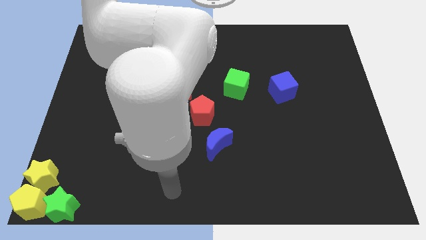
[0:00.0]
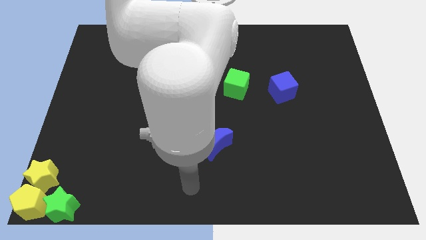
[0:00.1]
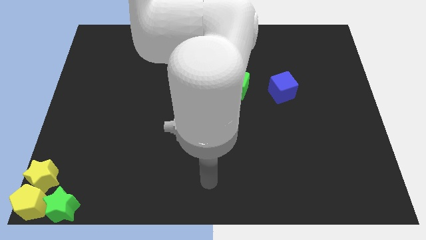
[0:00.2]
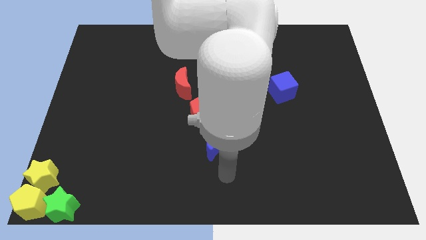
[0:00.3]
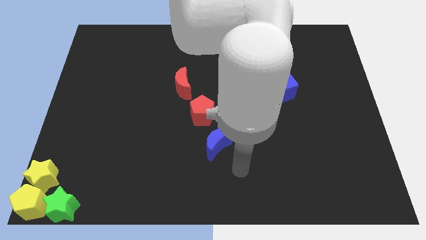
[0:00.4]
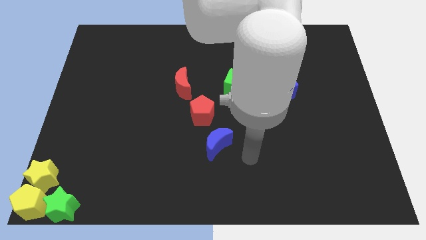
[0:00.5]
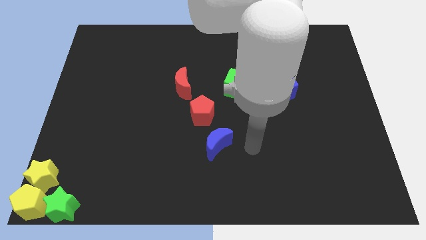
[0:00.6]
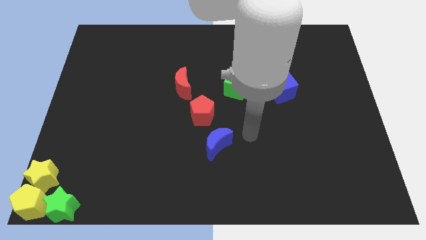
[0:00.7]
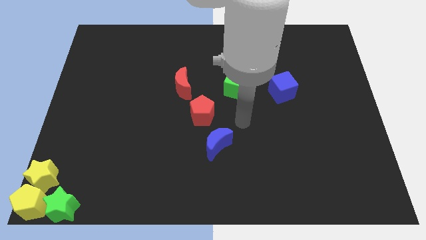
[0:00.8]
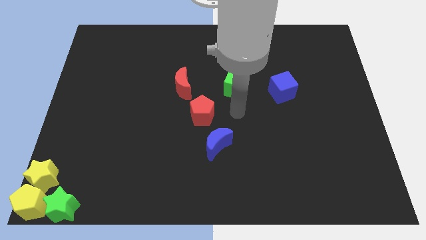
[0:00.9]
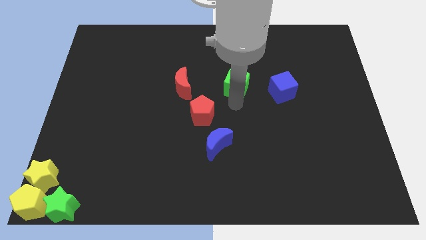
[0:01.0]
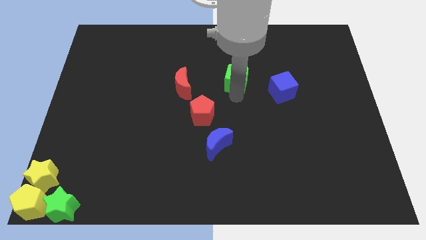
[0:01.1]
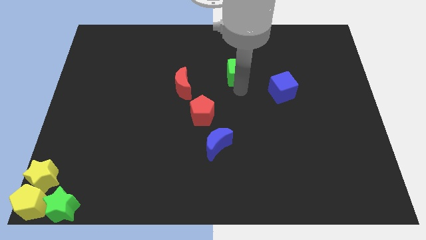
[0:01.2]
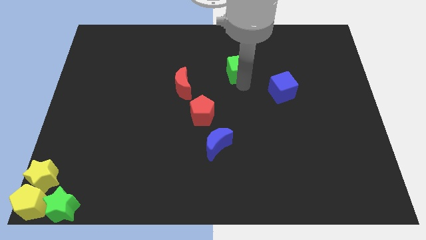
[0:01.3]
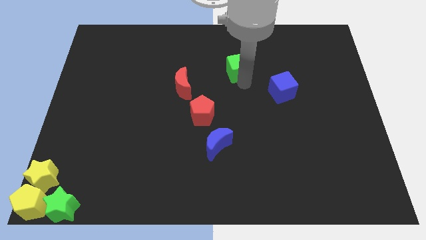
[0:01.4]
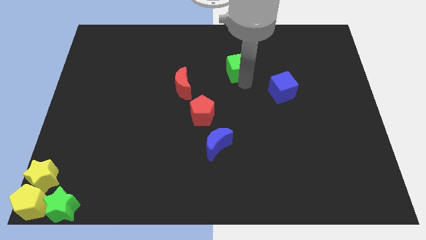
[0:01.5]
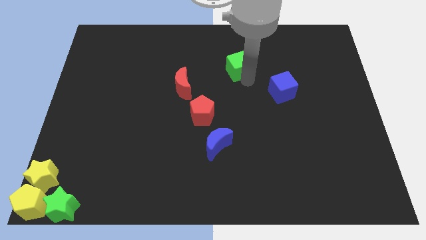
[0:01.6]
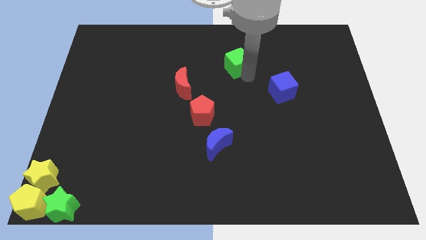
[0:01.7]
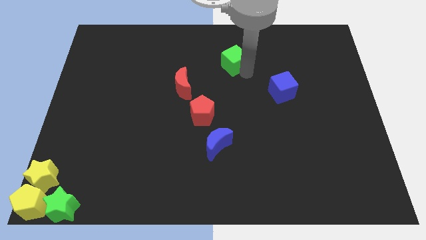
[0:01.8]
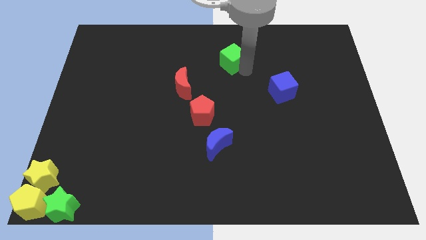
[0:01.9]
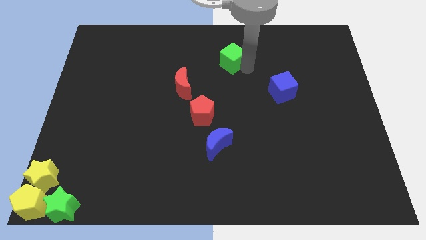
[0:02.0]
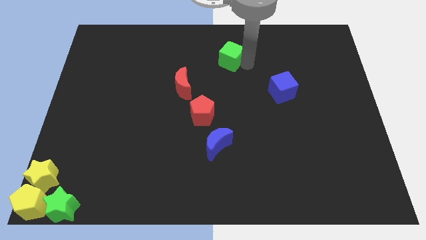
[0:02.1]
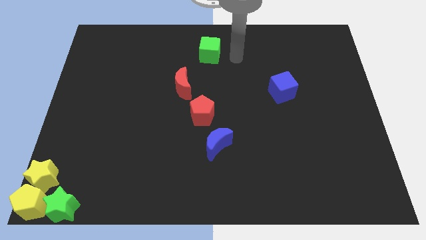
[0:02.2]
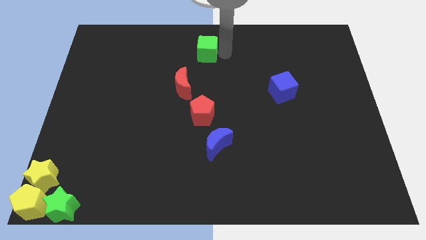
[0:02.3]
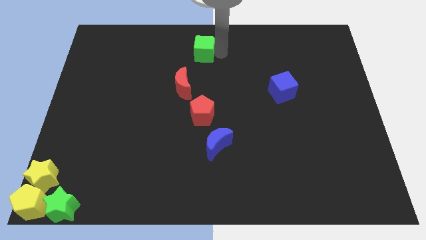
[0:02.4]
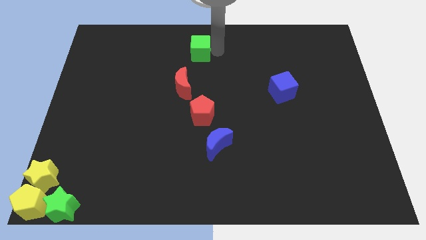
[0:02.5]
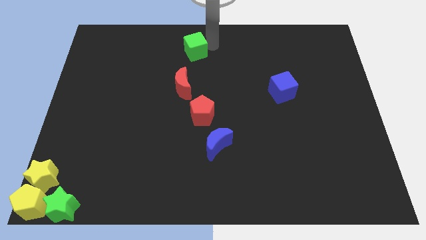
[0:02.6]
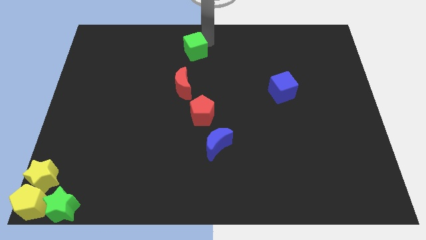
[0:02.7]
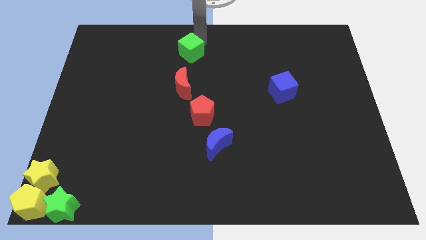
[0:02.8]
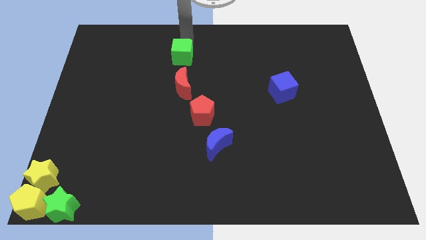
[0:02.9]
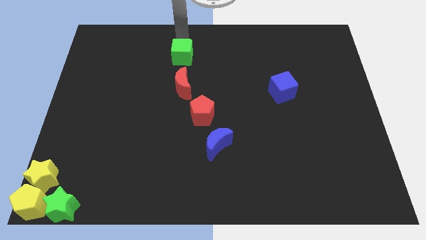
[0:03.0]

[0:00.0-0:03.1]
place the green cube above the red moon

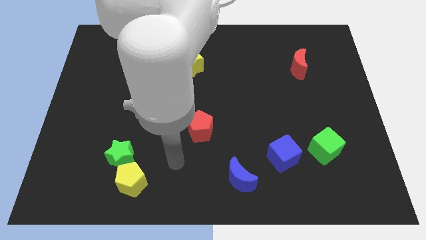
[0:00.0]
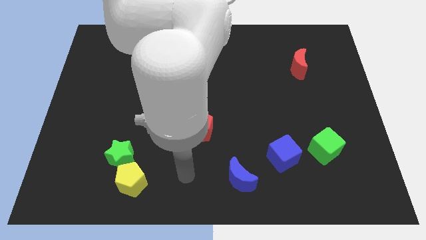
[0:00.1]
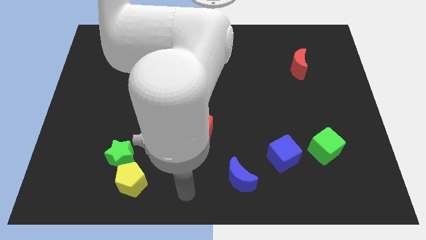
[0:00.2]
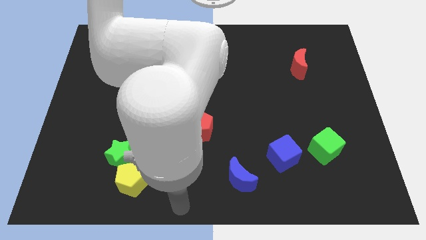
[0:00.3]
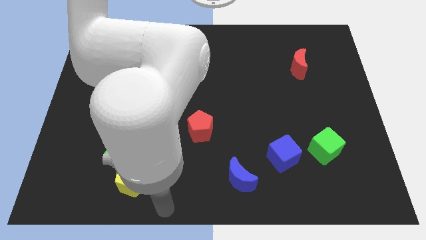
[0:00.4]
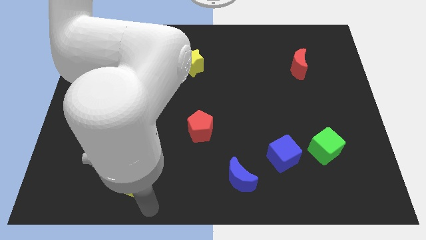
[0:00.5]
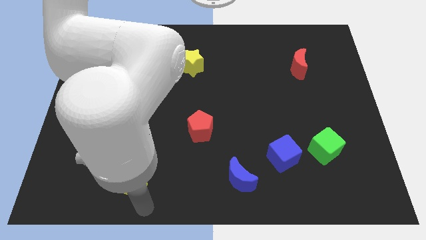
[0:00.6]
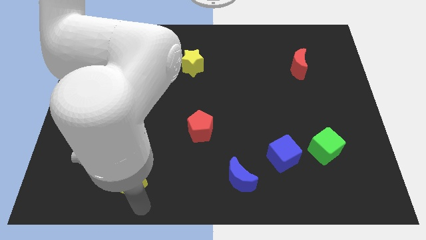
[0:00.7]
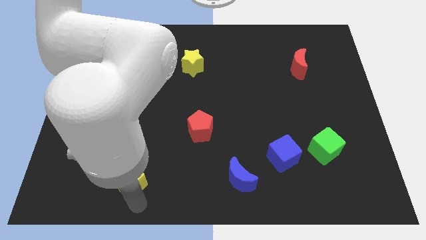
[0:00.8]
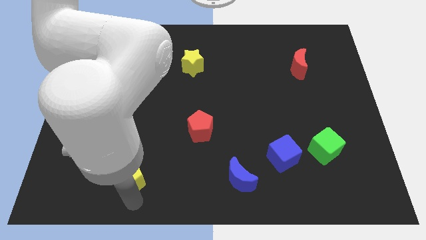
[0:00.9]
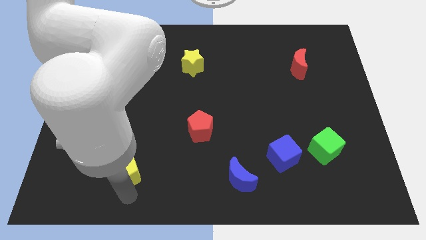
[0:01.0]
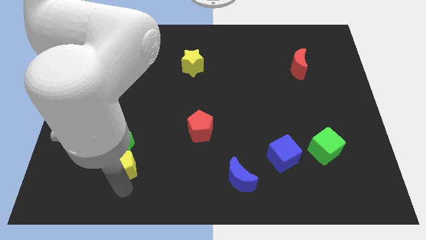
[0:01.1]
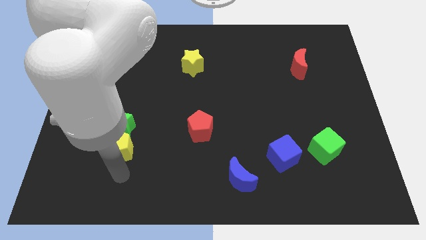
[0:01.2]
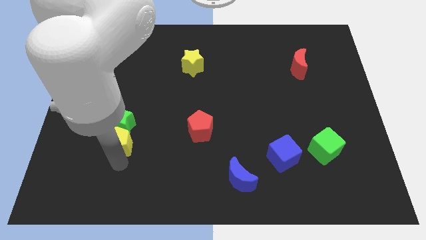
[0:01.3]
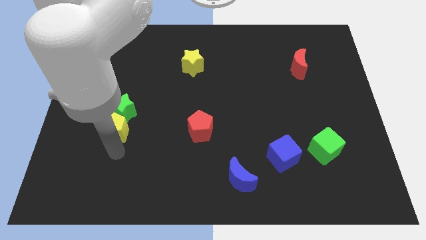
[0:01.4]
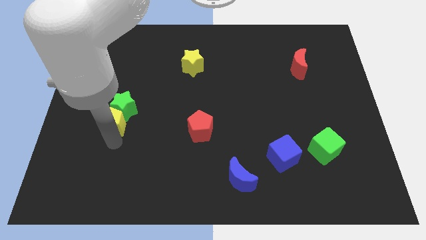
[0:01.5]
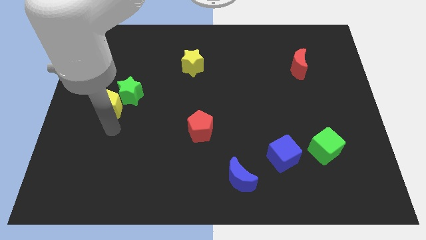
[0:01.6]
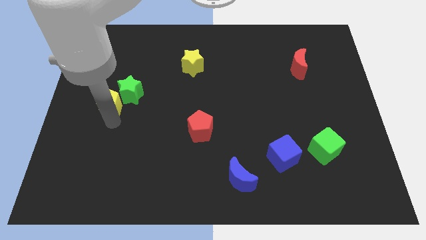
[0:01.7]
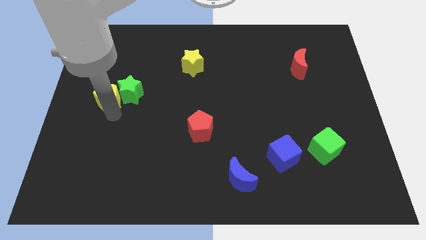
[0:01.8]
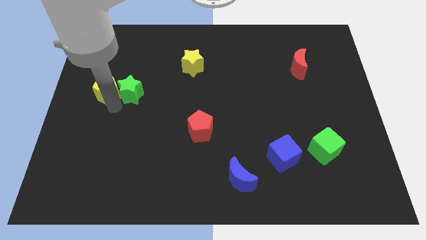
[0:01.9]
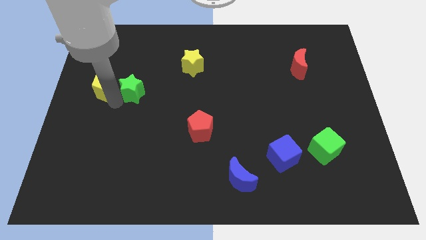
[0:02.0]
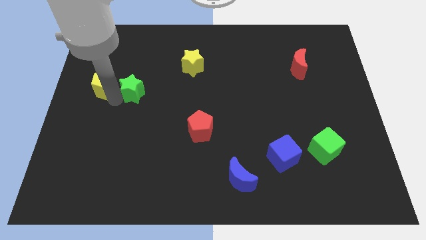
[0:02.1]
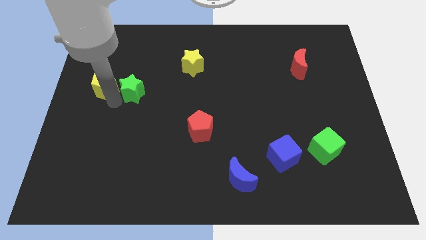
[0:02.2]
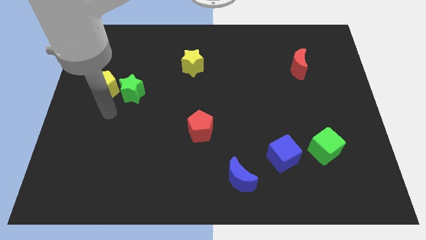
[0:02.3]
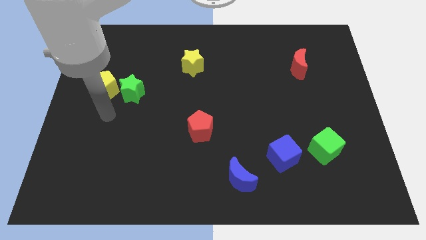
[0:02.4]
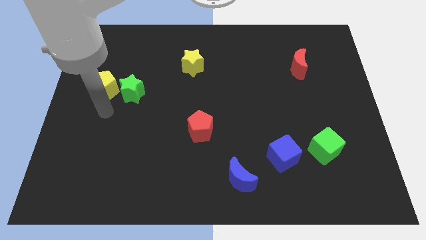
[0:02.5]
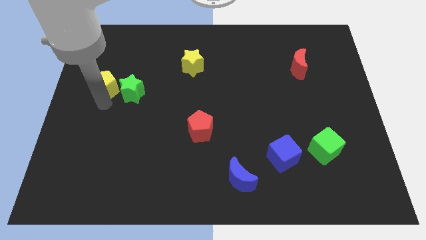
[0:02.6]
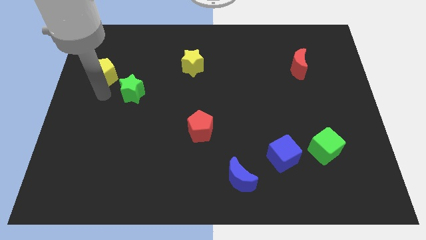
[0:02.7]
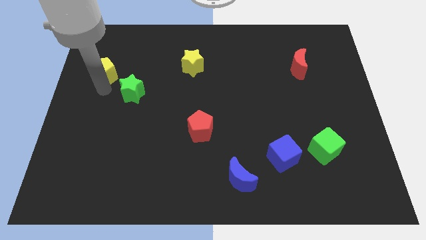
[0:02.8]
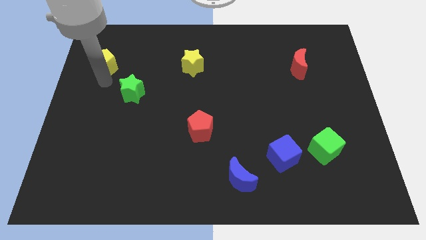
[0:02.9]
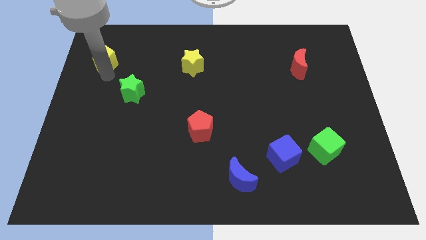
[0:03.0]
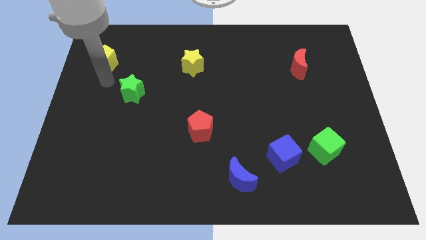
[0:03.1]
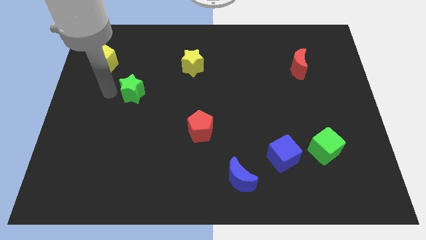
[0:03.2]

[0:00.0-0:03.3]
move the yellow pentagon to the horizontal left side of the yellow star

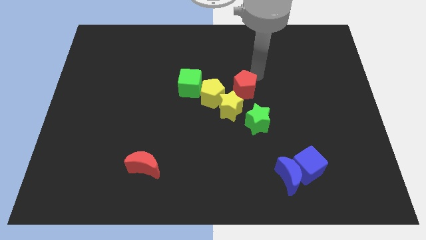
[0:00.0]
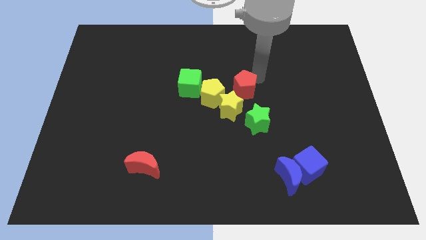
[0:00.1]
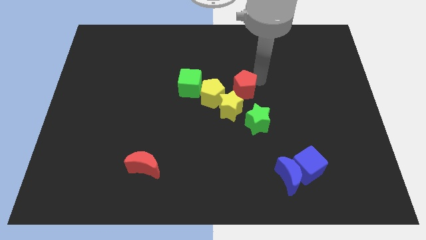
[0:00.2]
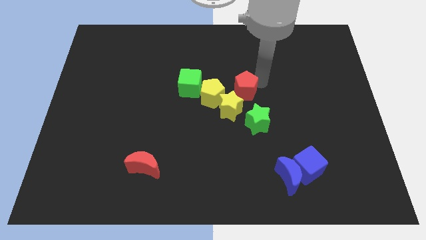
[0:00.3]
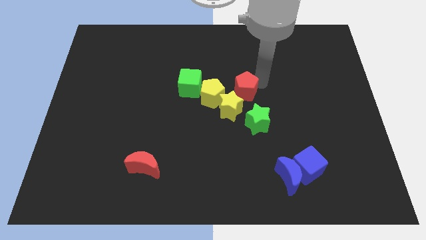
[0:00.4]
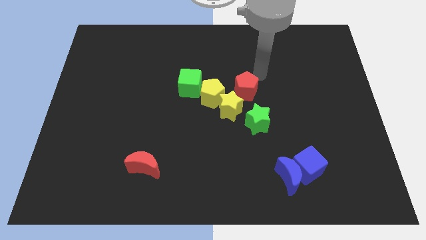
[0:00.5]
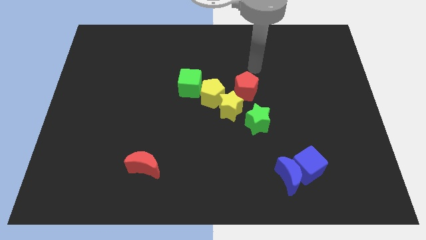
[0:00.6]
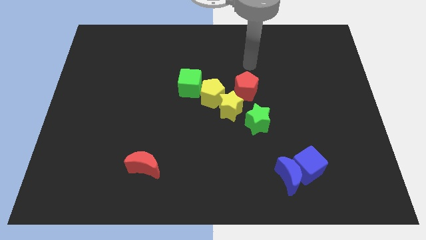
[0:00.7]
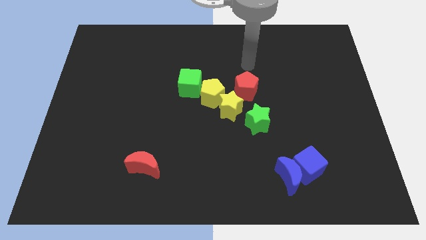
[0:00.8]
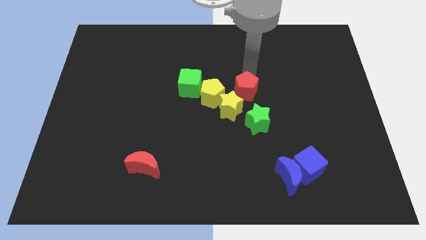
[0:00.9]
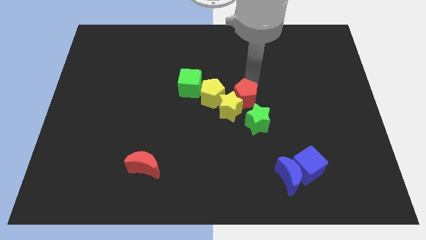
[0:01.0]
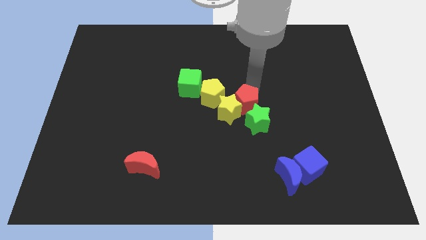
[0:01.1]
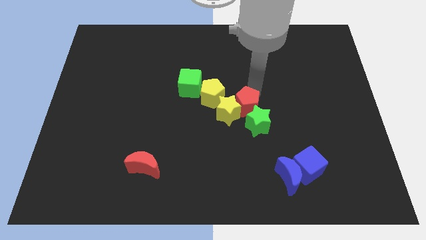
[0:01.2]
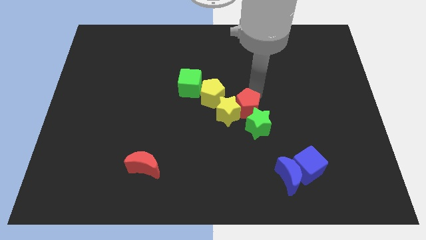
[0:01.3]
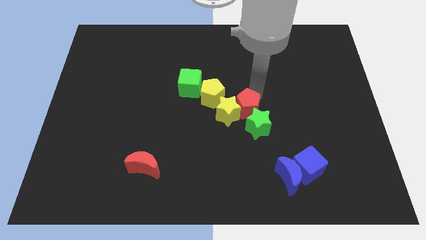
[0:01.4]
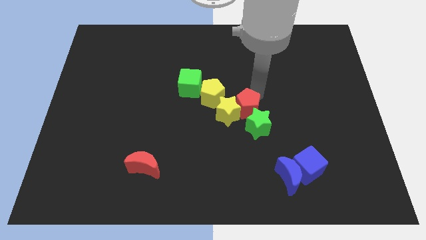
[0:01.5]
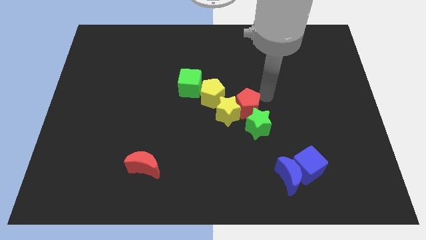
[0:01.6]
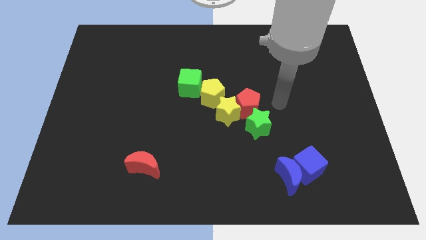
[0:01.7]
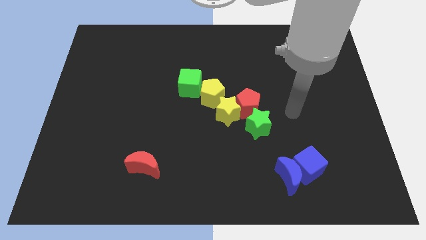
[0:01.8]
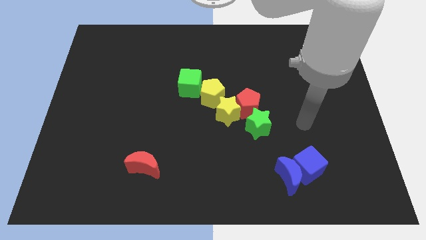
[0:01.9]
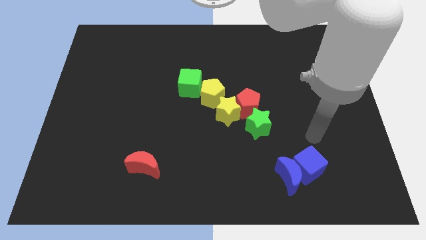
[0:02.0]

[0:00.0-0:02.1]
push the red pentagon to the top of green star

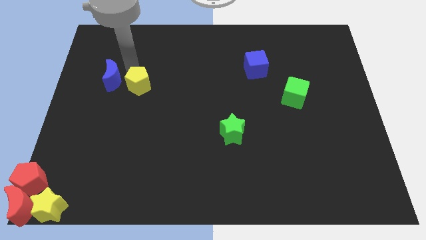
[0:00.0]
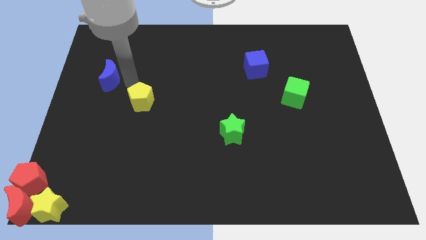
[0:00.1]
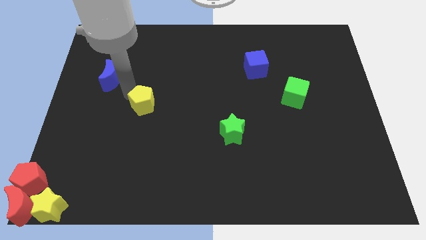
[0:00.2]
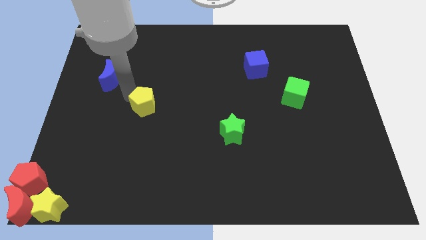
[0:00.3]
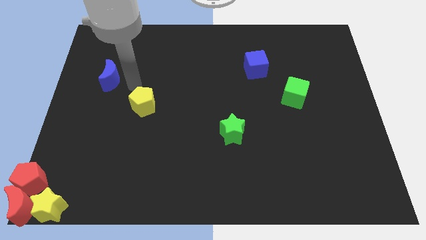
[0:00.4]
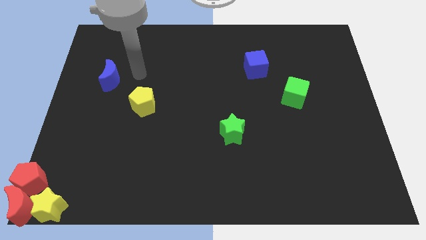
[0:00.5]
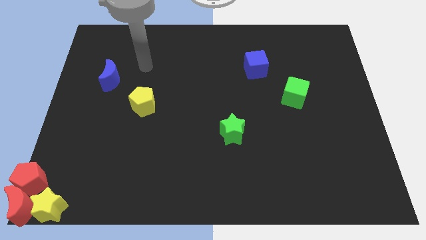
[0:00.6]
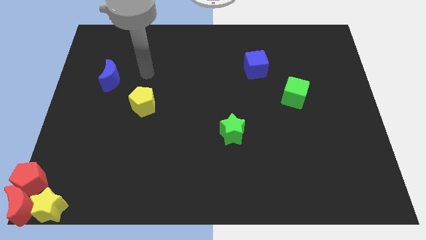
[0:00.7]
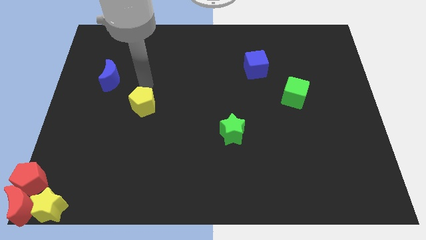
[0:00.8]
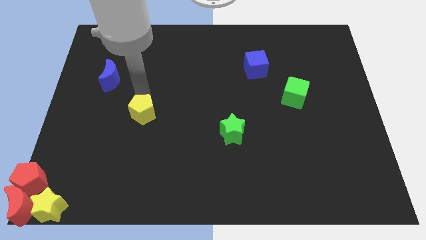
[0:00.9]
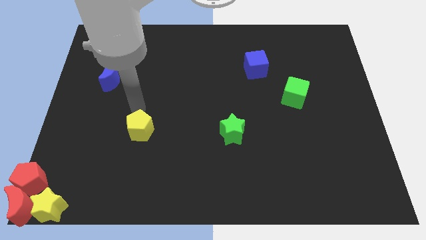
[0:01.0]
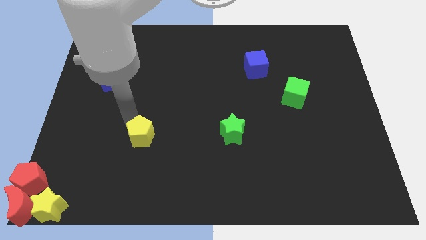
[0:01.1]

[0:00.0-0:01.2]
place the yellow pentagon horizontally at the left side of the green star
